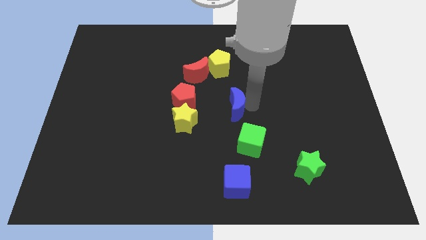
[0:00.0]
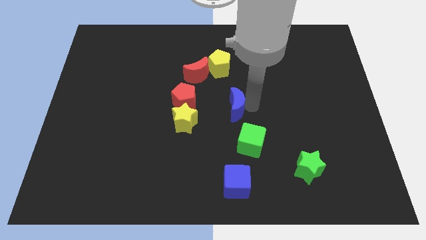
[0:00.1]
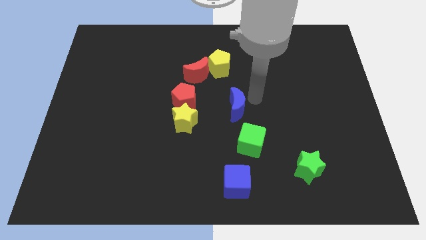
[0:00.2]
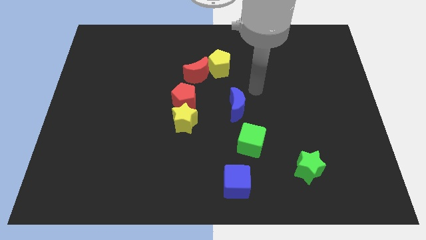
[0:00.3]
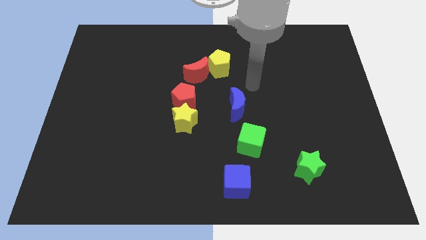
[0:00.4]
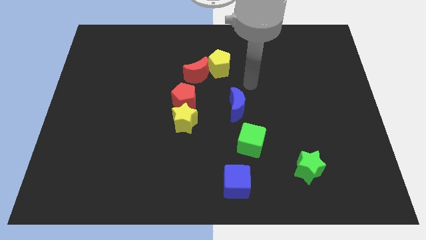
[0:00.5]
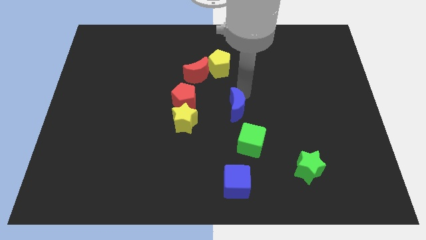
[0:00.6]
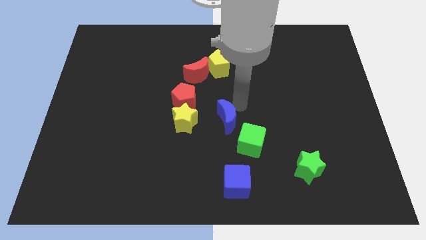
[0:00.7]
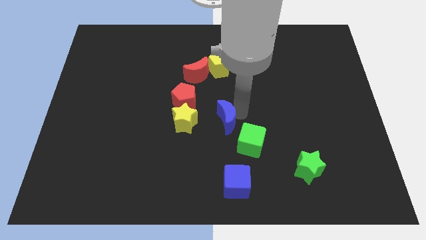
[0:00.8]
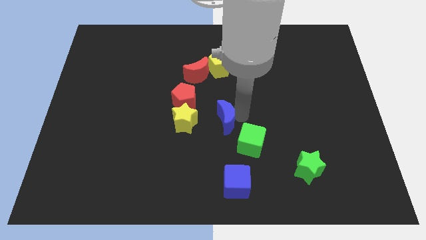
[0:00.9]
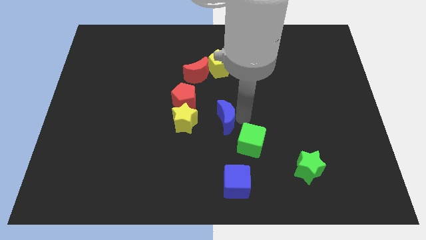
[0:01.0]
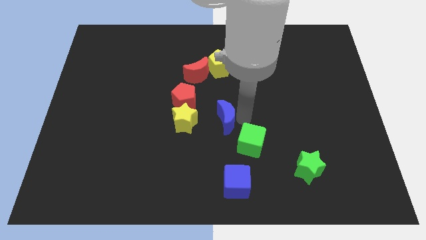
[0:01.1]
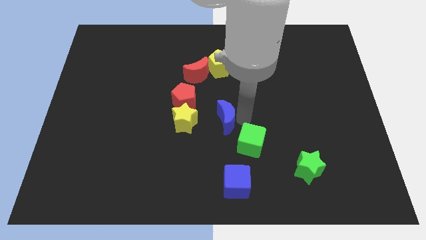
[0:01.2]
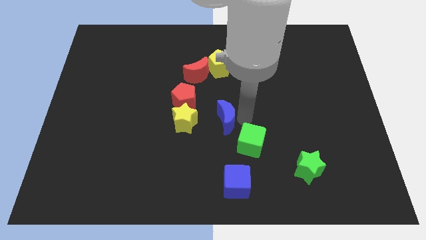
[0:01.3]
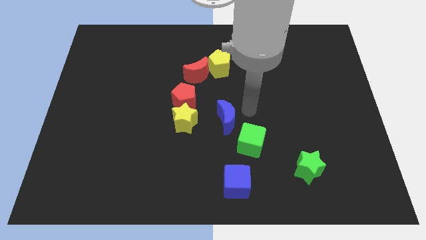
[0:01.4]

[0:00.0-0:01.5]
put the blue crescent at the top left of the green cube

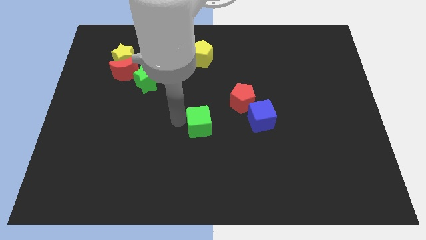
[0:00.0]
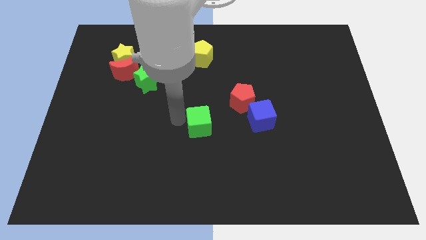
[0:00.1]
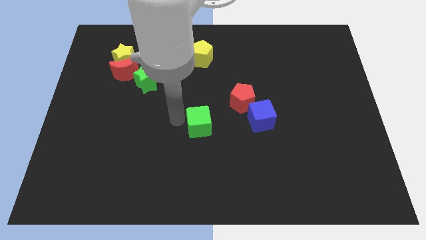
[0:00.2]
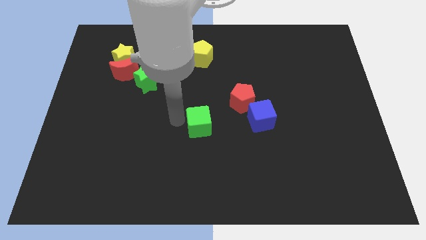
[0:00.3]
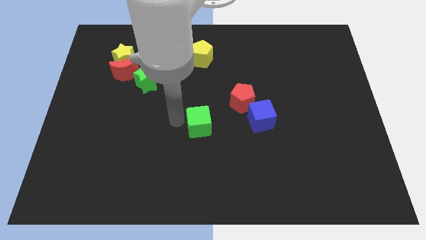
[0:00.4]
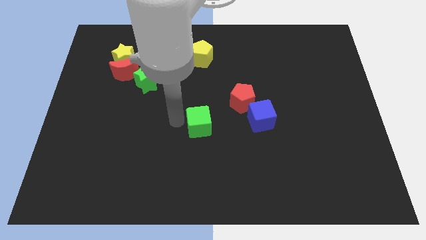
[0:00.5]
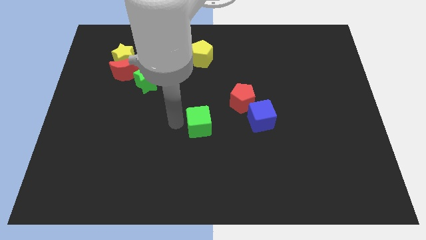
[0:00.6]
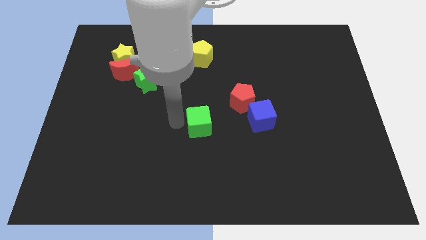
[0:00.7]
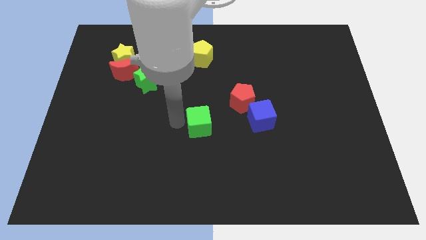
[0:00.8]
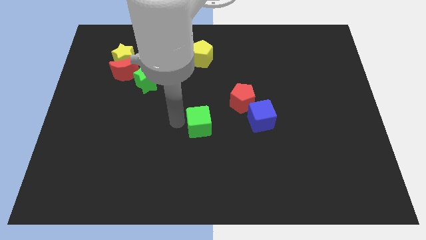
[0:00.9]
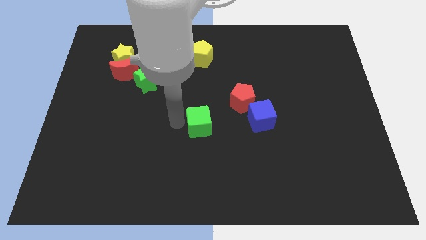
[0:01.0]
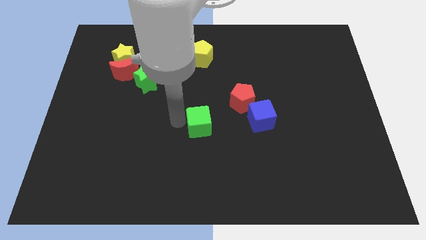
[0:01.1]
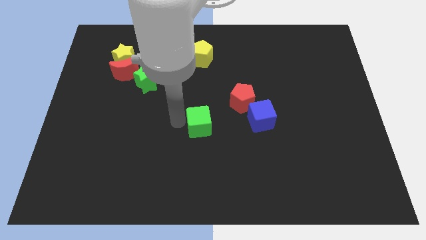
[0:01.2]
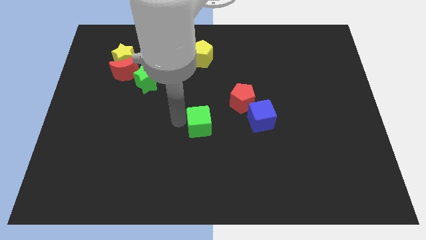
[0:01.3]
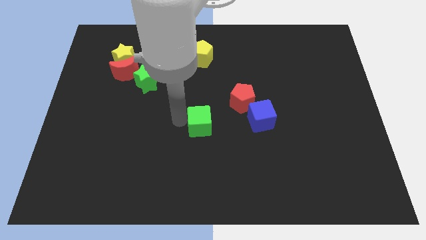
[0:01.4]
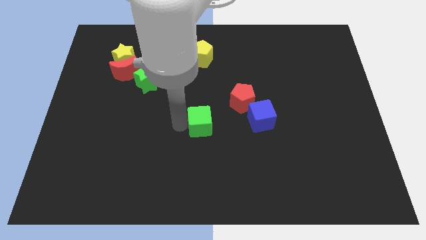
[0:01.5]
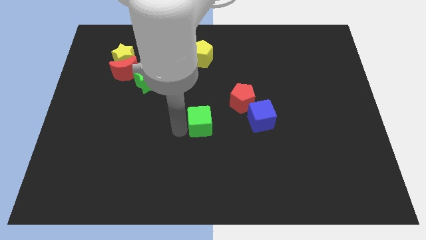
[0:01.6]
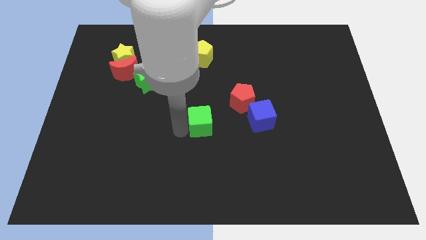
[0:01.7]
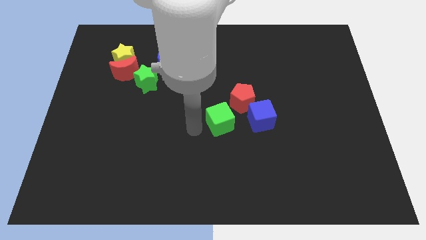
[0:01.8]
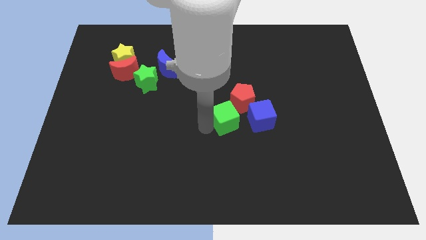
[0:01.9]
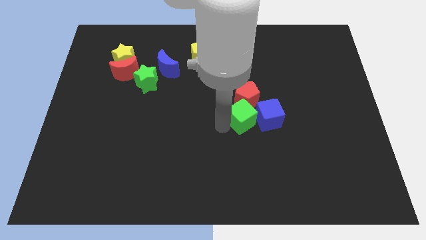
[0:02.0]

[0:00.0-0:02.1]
push the green cube into the blue cube

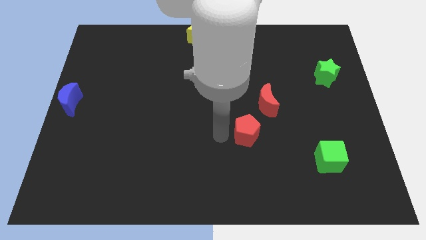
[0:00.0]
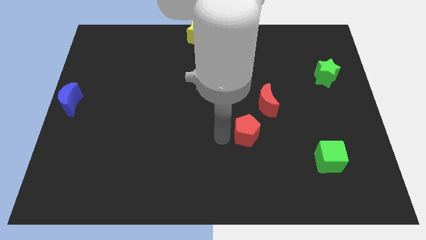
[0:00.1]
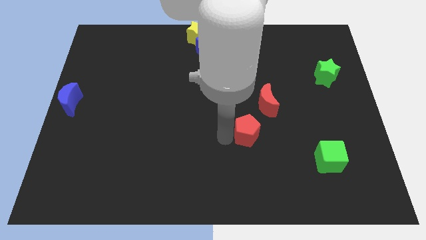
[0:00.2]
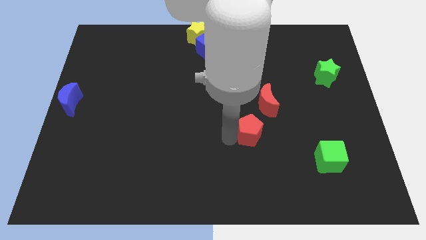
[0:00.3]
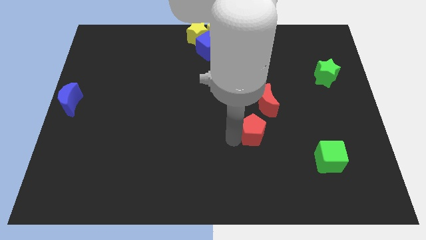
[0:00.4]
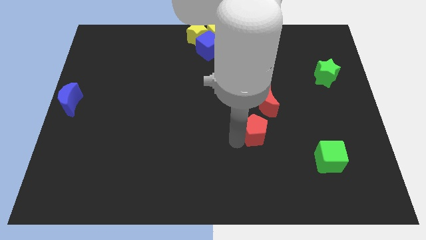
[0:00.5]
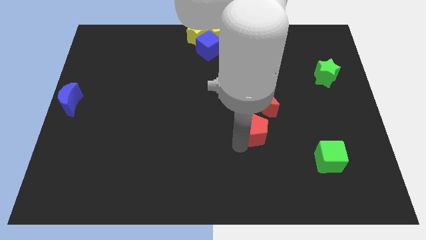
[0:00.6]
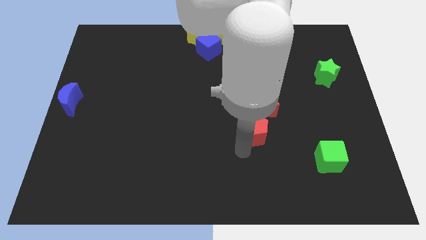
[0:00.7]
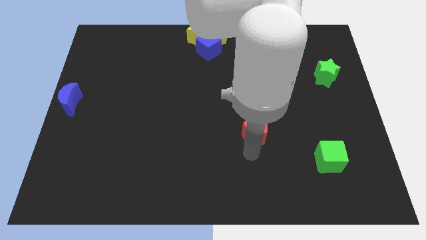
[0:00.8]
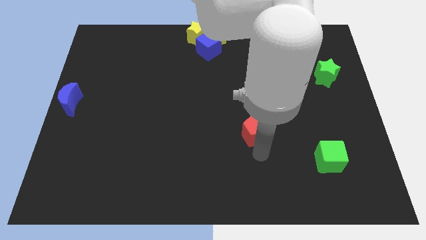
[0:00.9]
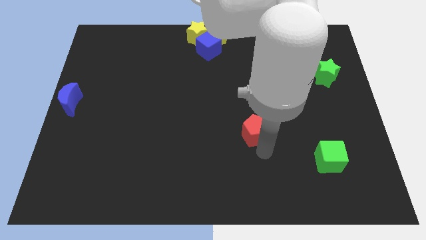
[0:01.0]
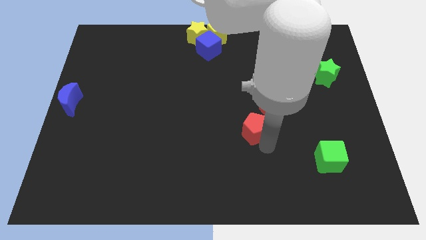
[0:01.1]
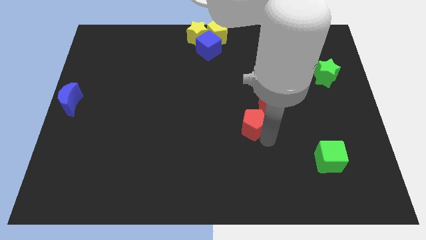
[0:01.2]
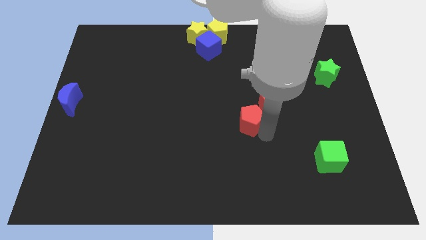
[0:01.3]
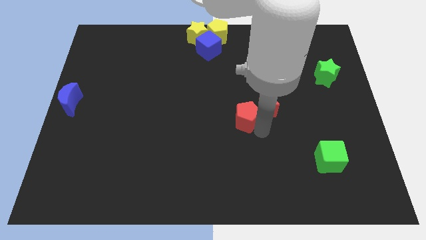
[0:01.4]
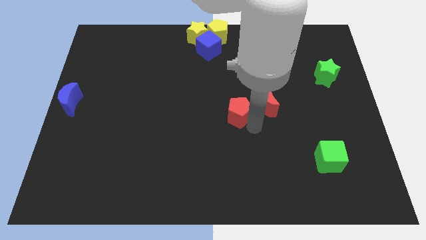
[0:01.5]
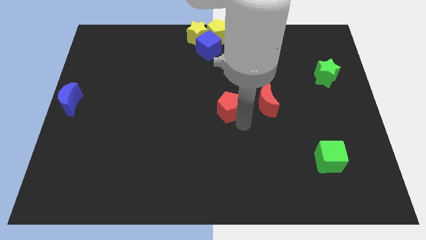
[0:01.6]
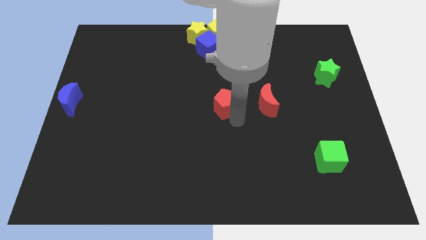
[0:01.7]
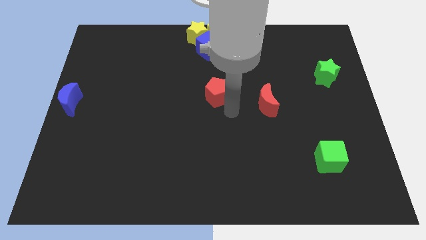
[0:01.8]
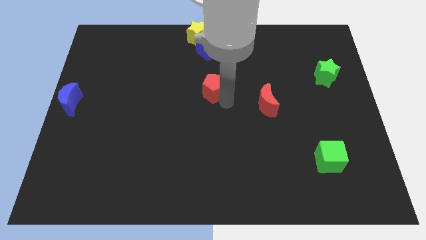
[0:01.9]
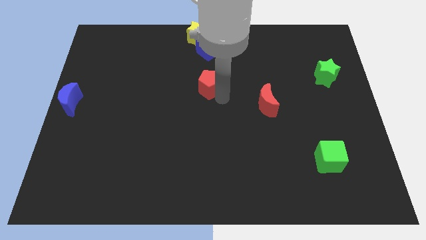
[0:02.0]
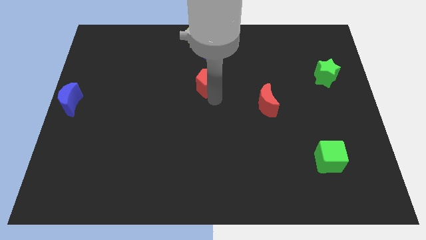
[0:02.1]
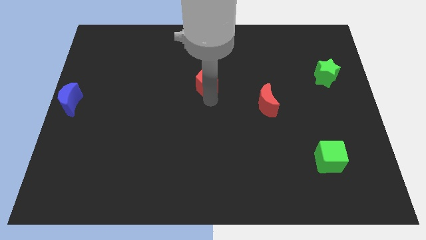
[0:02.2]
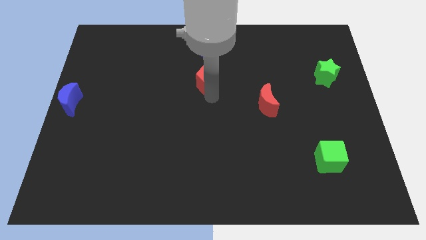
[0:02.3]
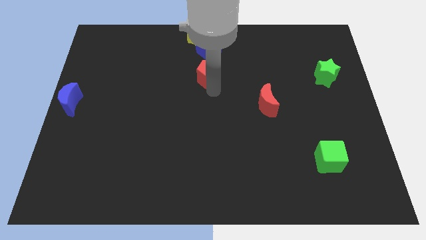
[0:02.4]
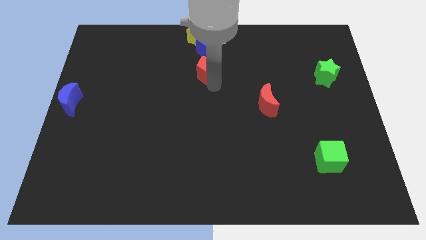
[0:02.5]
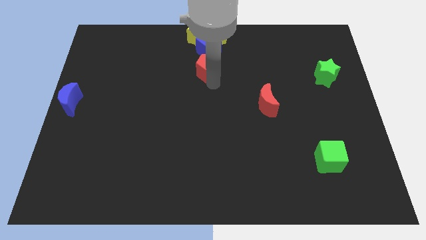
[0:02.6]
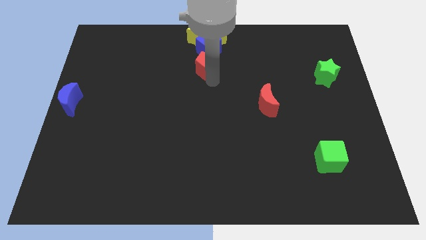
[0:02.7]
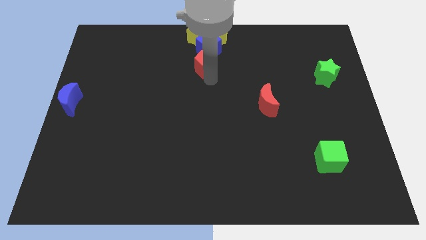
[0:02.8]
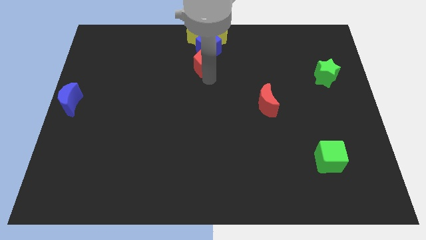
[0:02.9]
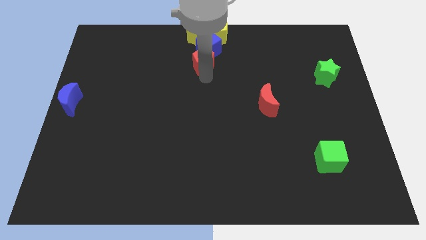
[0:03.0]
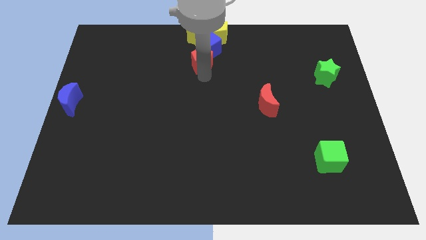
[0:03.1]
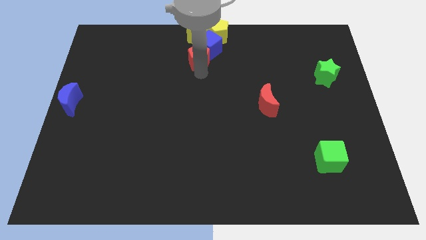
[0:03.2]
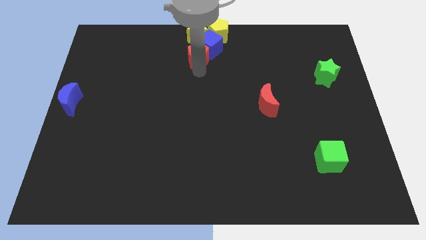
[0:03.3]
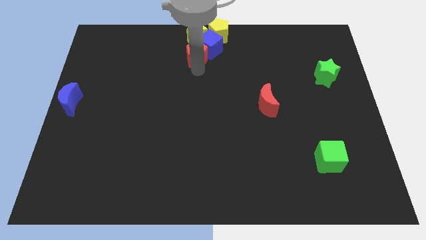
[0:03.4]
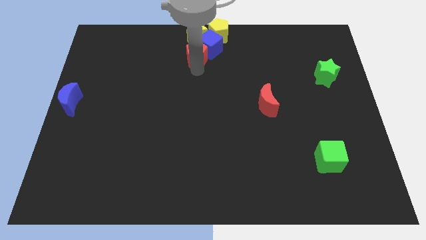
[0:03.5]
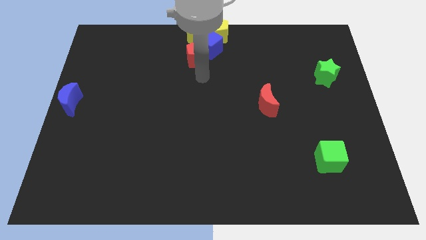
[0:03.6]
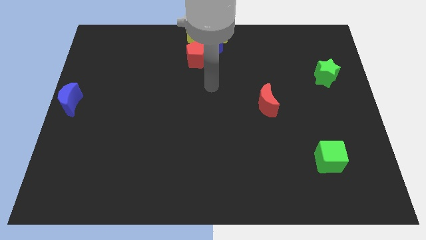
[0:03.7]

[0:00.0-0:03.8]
push the red pentagon to the left of the blue cube

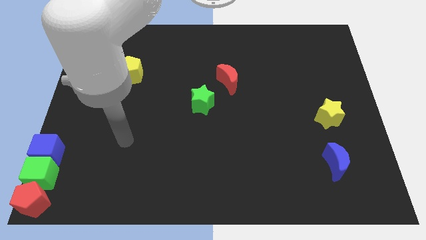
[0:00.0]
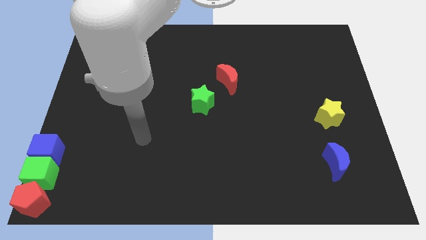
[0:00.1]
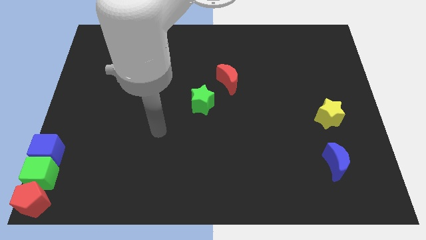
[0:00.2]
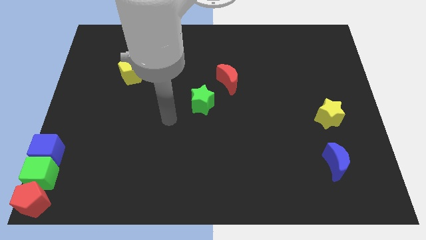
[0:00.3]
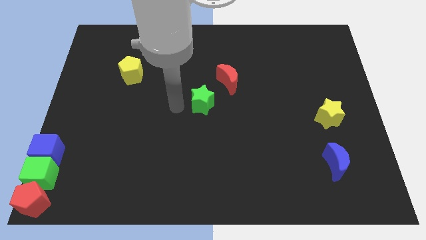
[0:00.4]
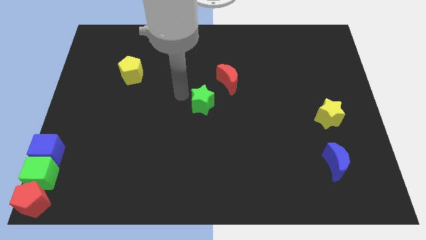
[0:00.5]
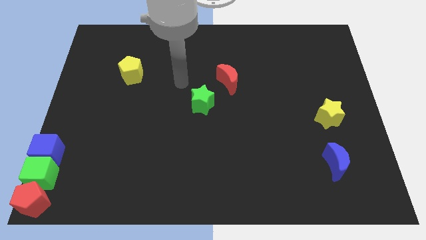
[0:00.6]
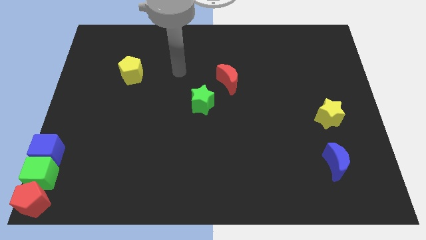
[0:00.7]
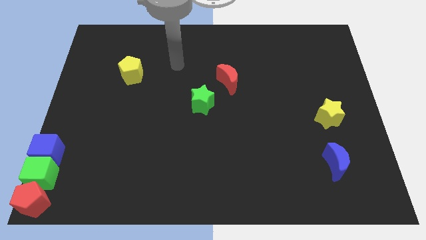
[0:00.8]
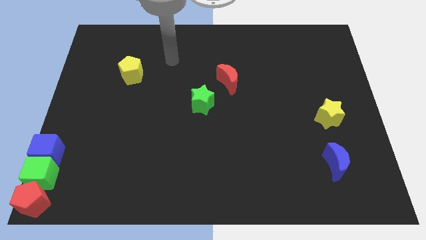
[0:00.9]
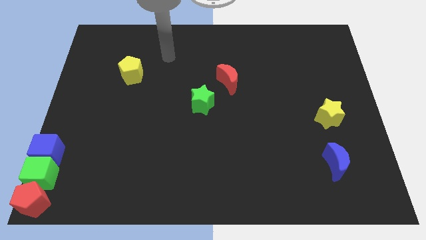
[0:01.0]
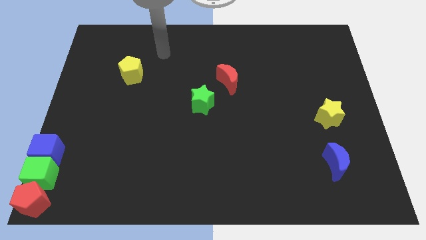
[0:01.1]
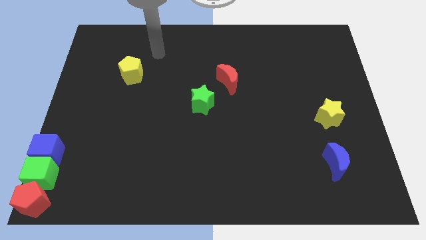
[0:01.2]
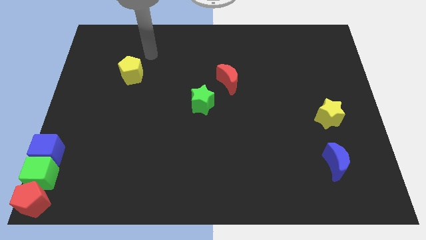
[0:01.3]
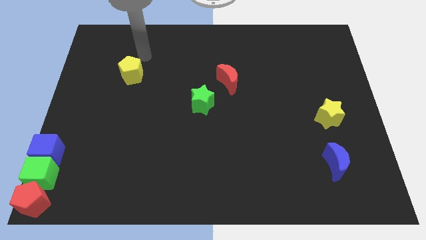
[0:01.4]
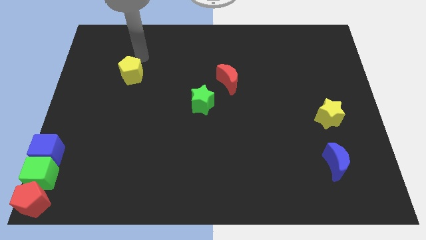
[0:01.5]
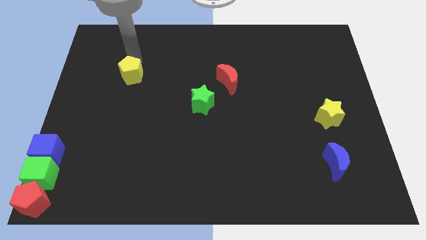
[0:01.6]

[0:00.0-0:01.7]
place your arm above the yellow pentagon
